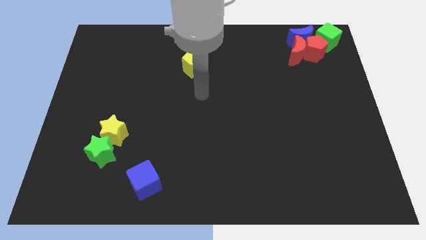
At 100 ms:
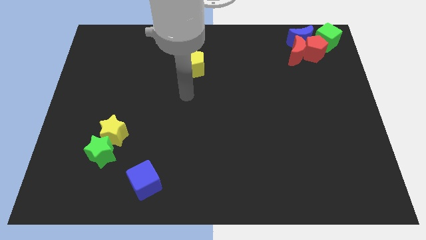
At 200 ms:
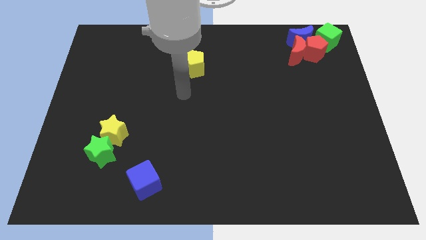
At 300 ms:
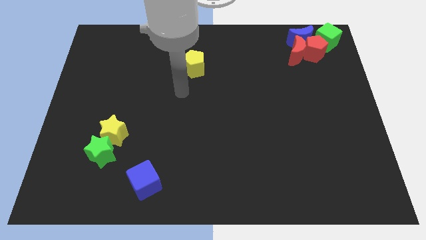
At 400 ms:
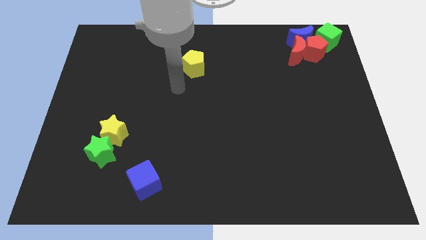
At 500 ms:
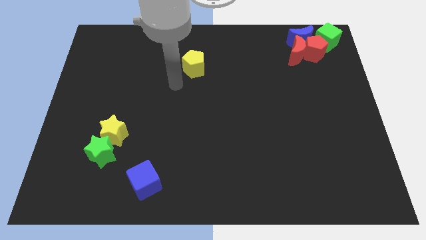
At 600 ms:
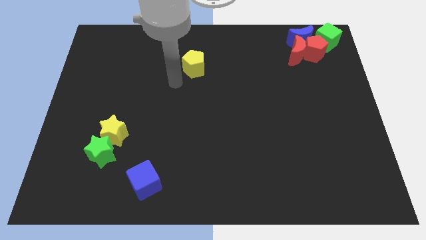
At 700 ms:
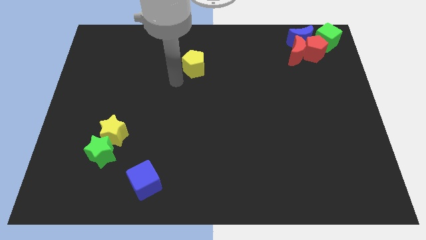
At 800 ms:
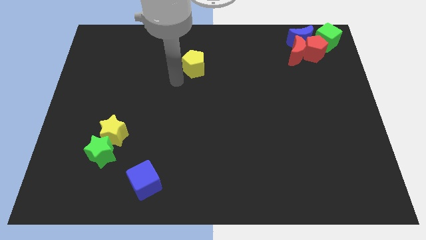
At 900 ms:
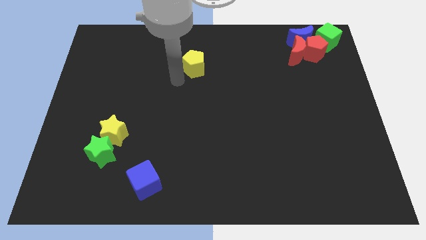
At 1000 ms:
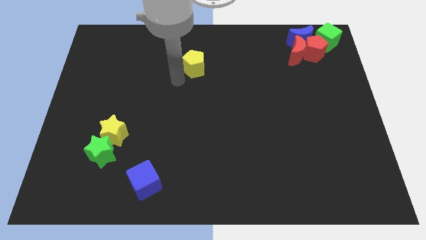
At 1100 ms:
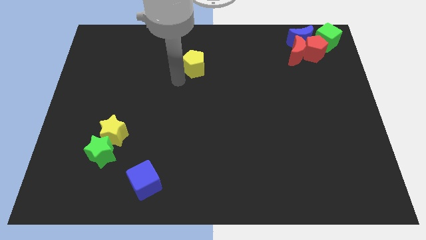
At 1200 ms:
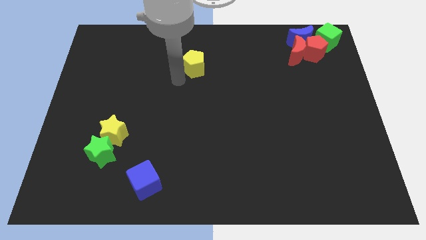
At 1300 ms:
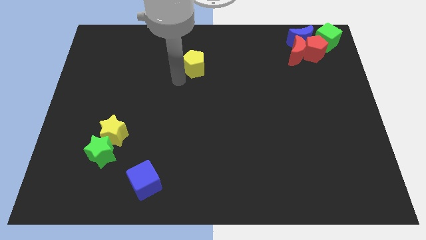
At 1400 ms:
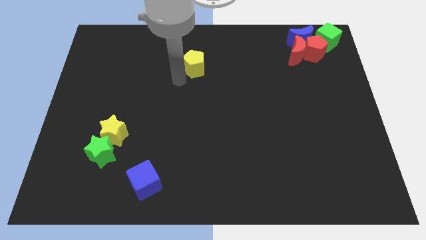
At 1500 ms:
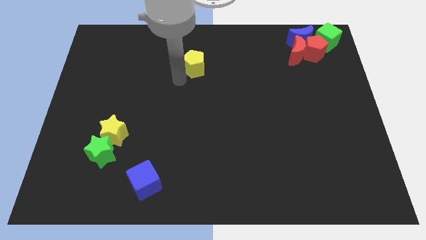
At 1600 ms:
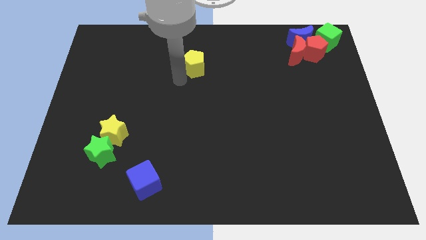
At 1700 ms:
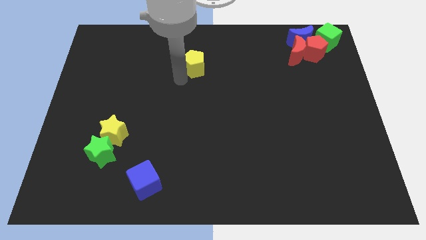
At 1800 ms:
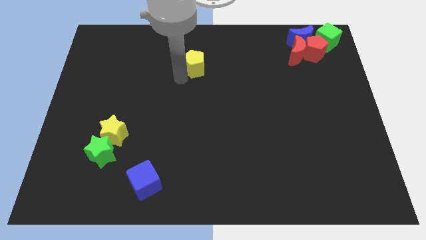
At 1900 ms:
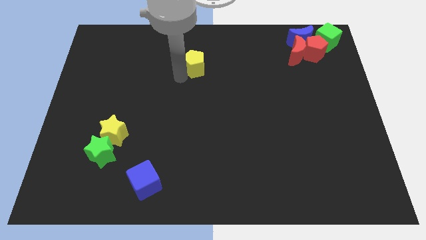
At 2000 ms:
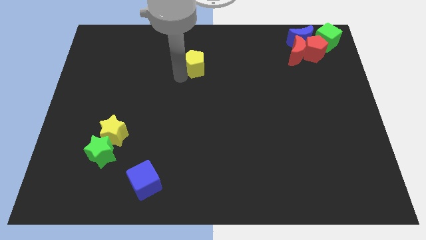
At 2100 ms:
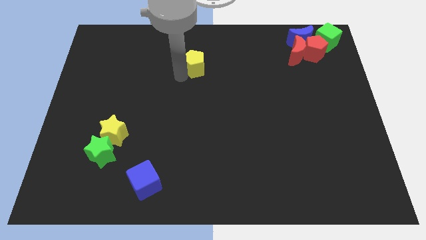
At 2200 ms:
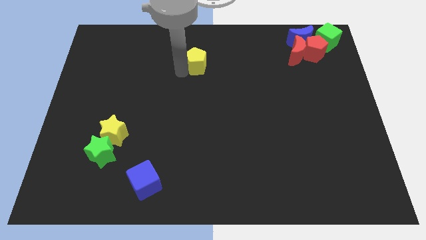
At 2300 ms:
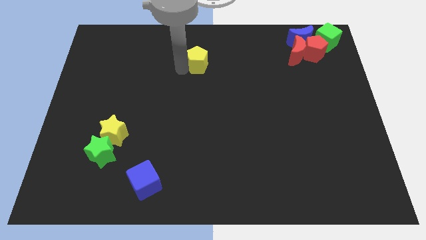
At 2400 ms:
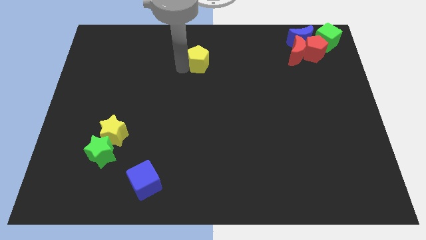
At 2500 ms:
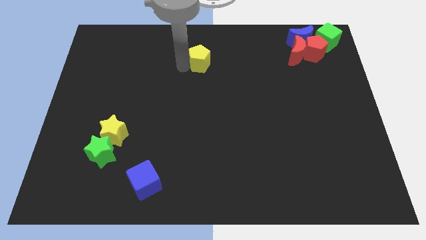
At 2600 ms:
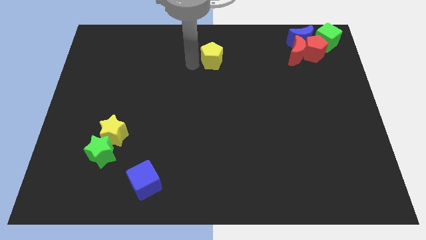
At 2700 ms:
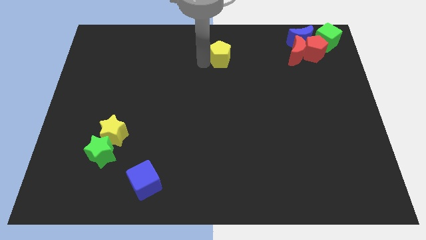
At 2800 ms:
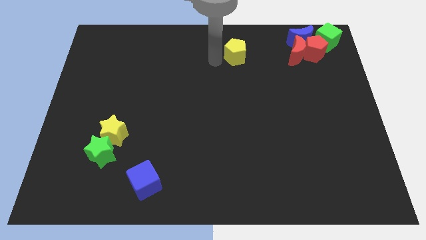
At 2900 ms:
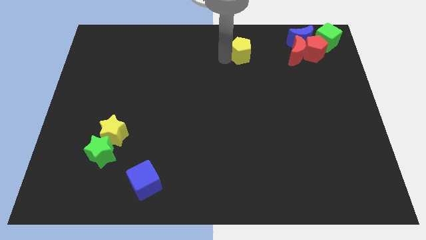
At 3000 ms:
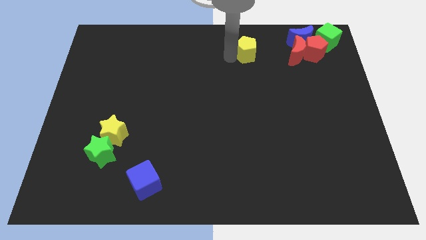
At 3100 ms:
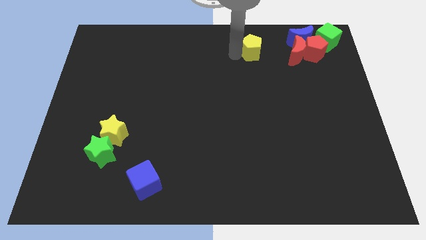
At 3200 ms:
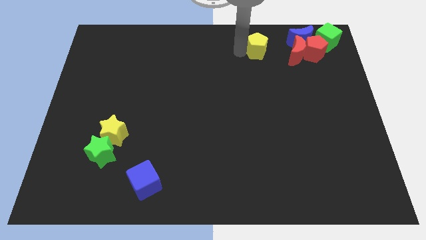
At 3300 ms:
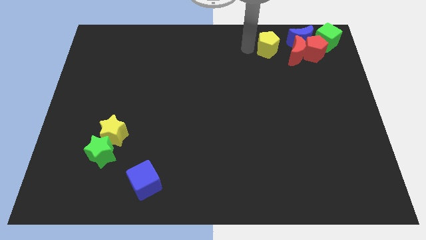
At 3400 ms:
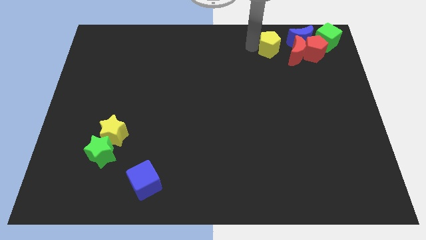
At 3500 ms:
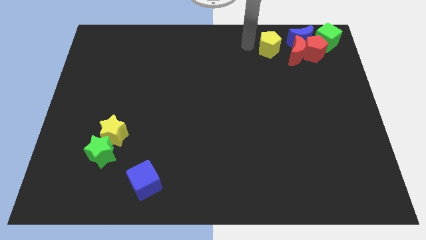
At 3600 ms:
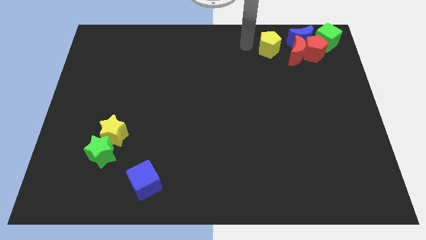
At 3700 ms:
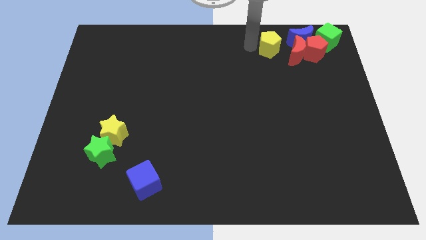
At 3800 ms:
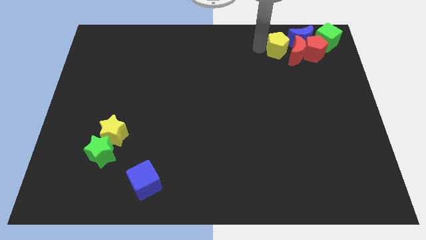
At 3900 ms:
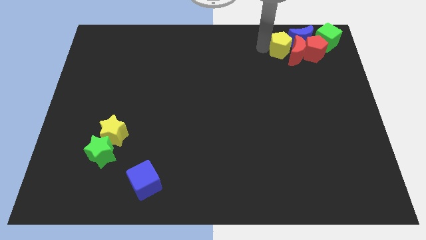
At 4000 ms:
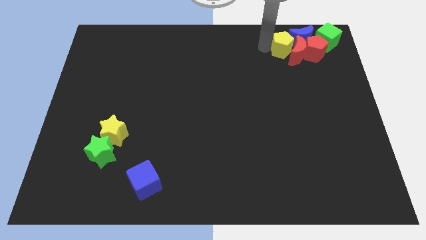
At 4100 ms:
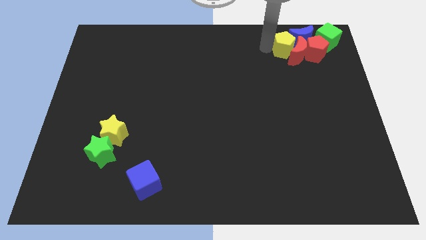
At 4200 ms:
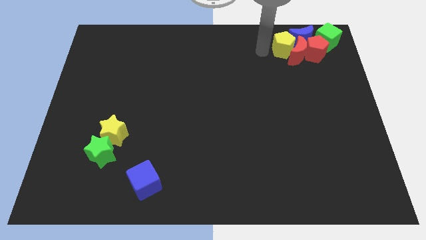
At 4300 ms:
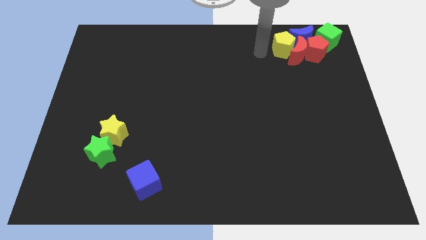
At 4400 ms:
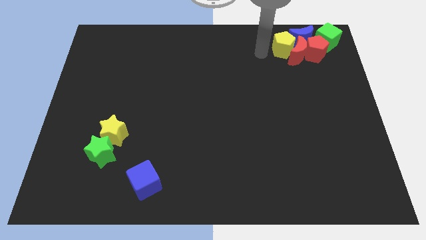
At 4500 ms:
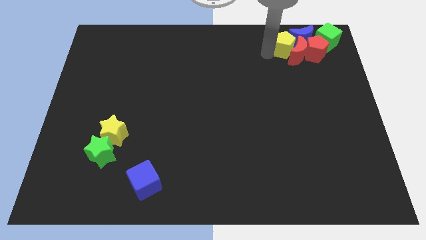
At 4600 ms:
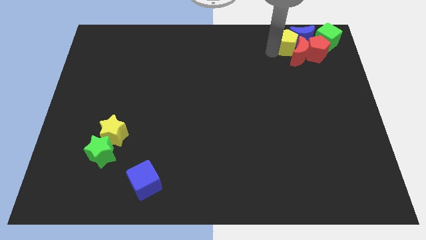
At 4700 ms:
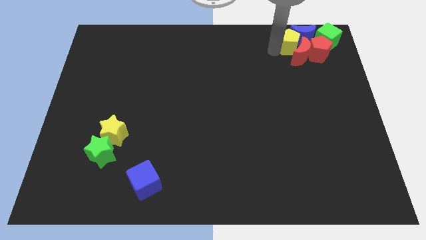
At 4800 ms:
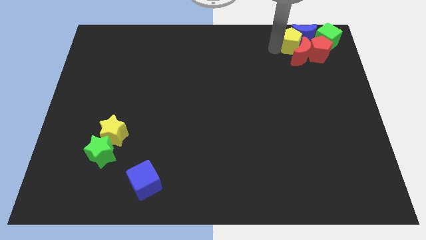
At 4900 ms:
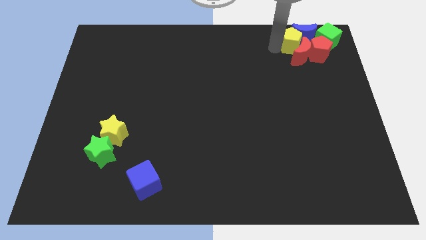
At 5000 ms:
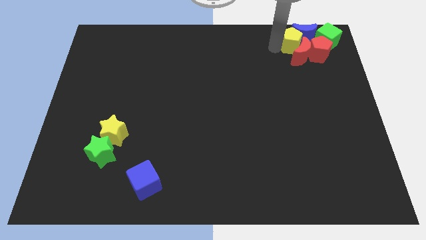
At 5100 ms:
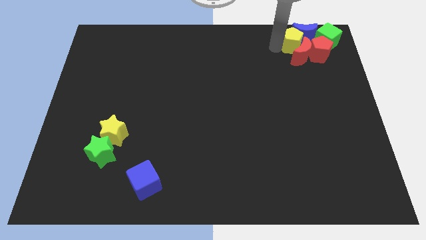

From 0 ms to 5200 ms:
push the yellow pentagon into the blue crescent

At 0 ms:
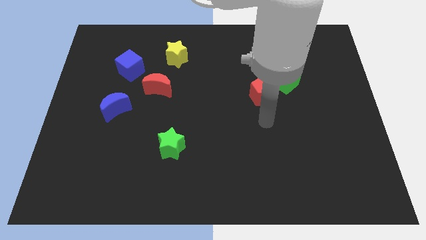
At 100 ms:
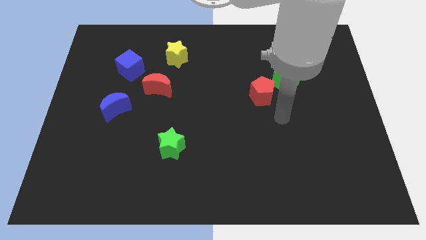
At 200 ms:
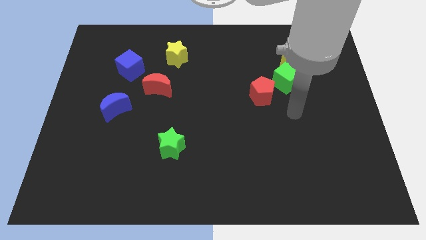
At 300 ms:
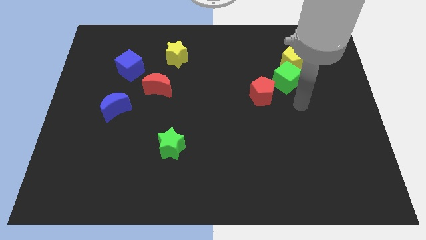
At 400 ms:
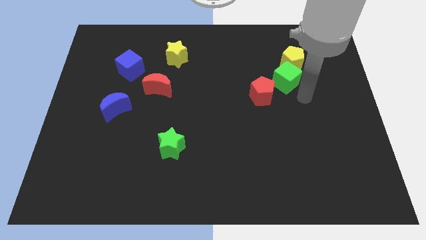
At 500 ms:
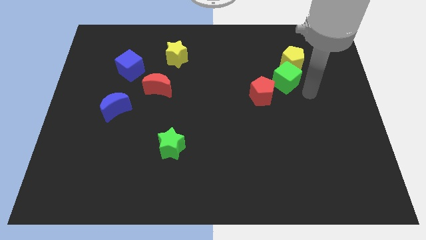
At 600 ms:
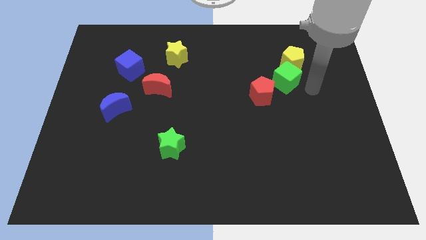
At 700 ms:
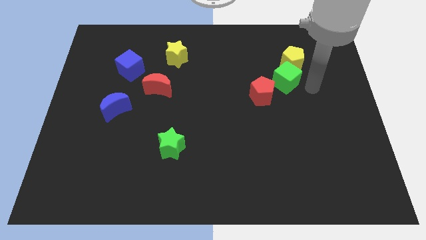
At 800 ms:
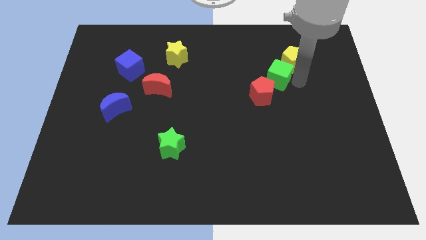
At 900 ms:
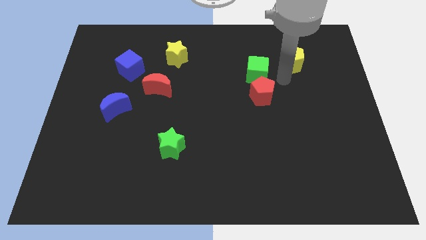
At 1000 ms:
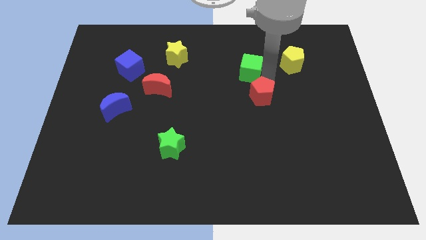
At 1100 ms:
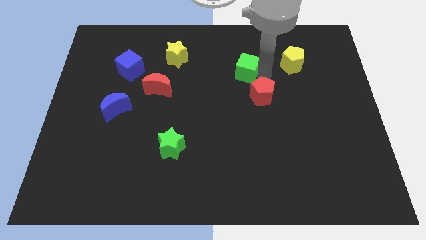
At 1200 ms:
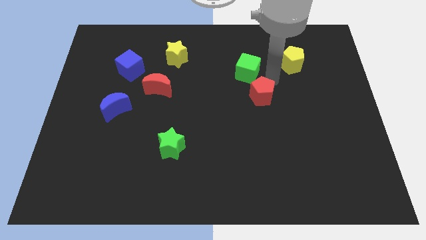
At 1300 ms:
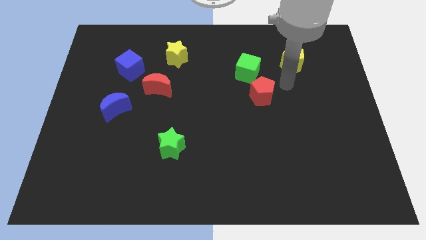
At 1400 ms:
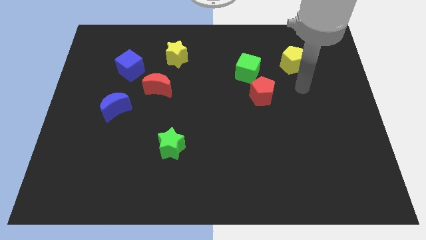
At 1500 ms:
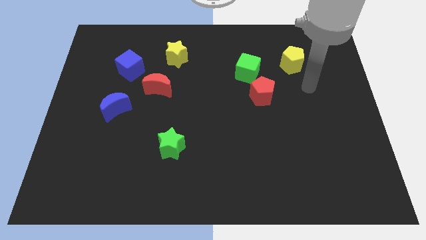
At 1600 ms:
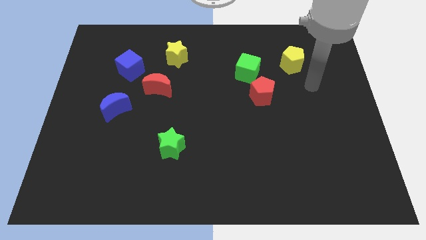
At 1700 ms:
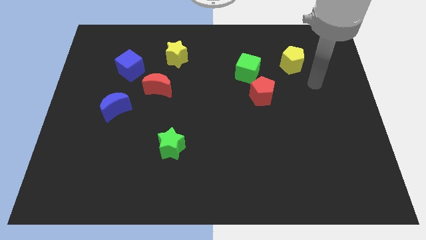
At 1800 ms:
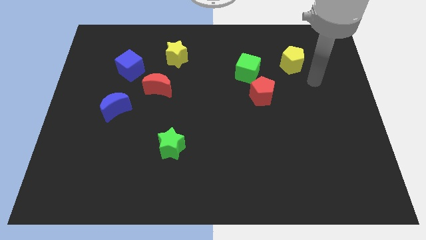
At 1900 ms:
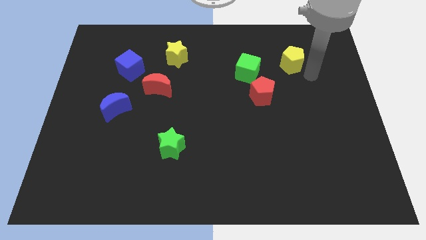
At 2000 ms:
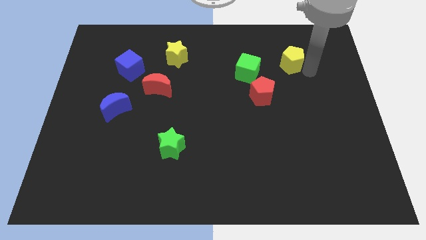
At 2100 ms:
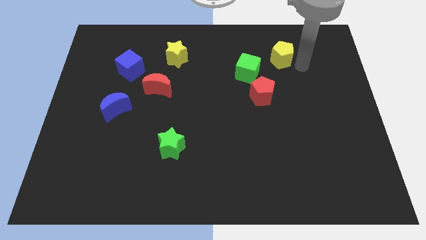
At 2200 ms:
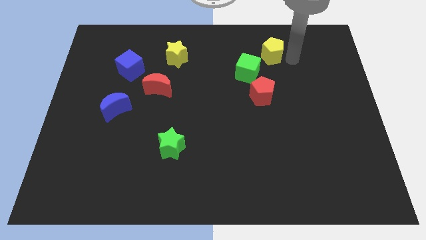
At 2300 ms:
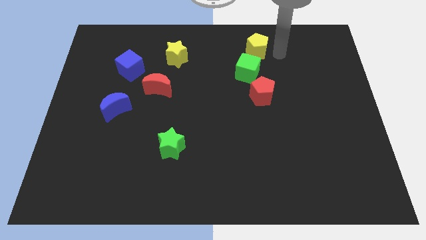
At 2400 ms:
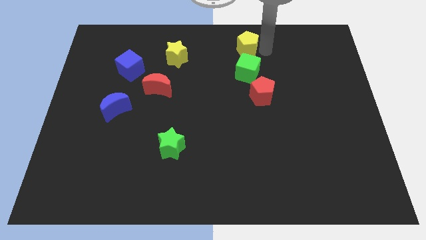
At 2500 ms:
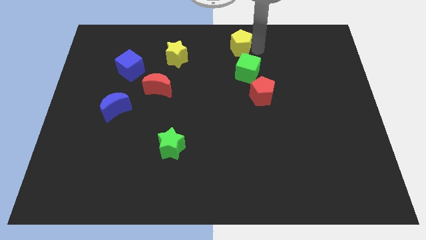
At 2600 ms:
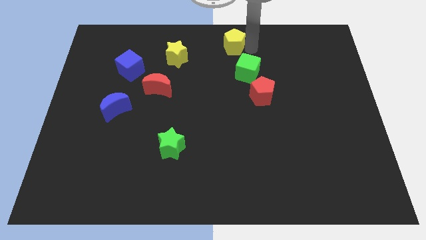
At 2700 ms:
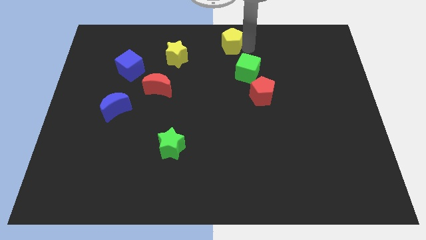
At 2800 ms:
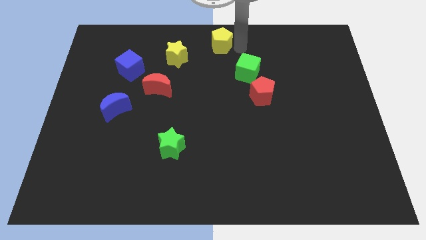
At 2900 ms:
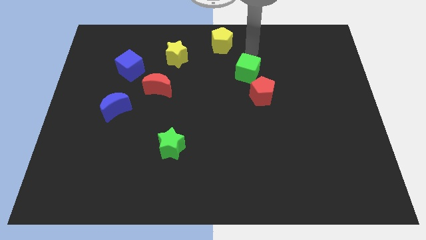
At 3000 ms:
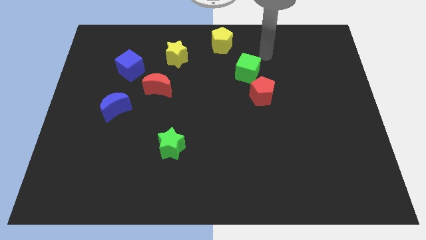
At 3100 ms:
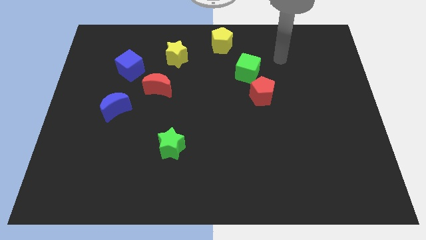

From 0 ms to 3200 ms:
push the yellow pentagon to the top center

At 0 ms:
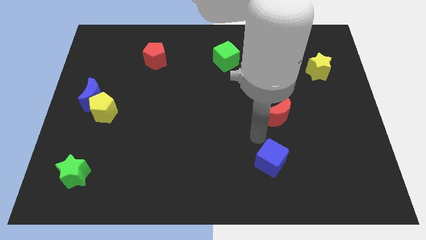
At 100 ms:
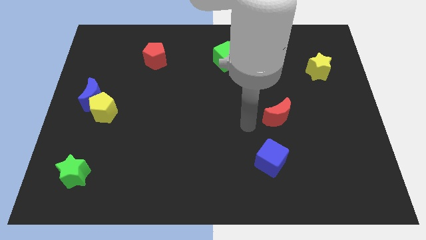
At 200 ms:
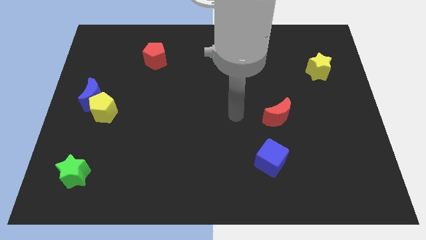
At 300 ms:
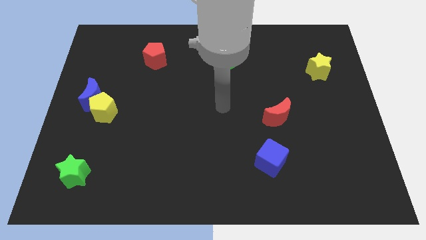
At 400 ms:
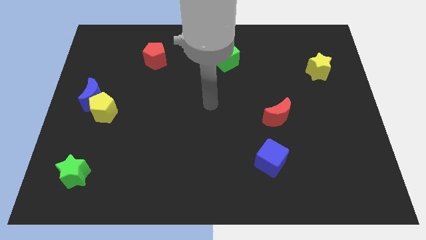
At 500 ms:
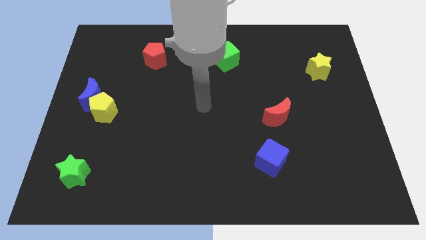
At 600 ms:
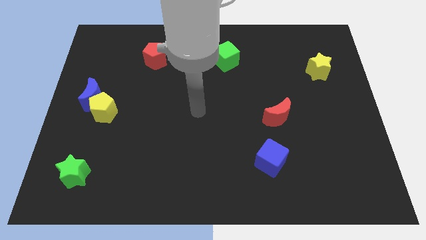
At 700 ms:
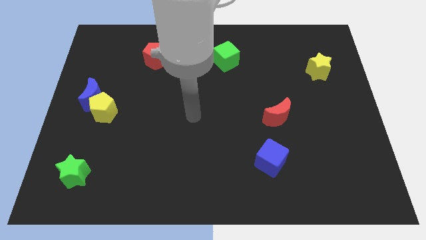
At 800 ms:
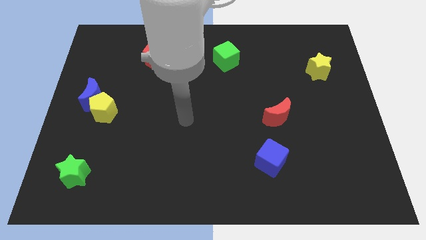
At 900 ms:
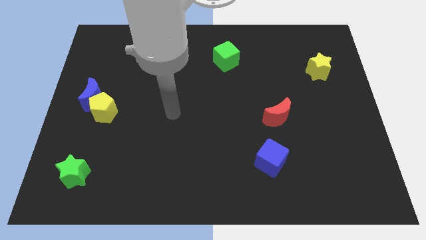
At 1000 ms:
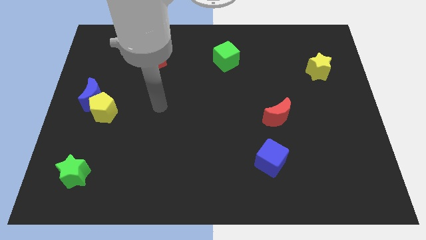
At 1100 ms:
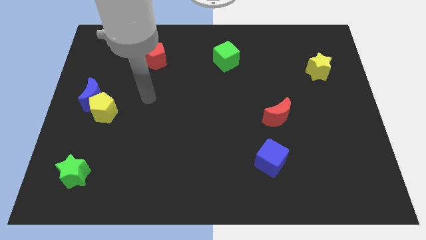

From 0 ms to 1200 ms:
move arm away from blue cube
